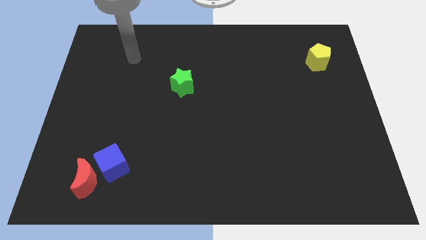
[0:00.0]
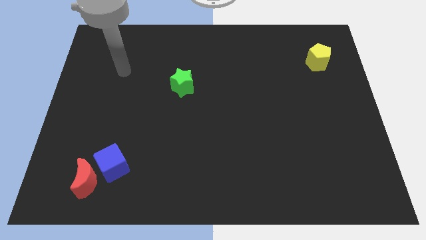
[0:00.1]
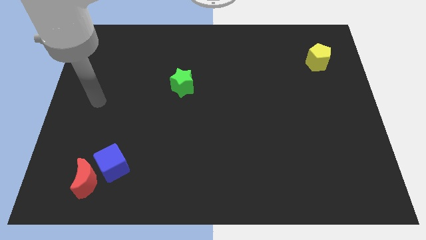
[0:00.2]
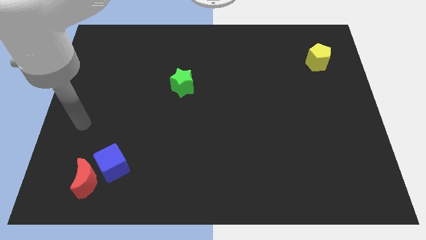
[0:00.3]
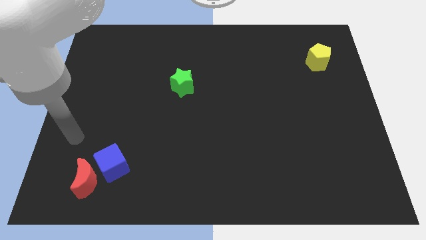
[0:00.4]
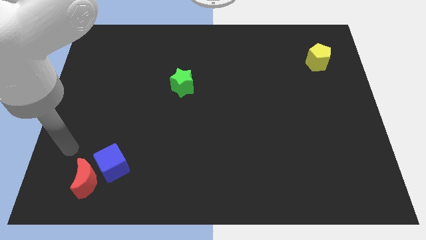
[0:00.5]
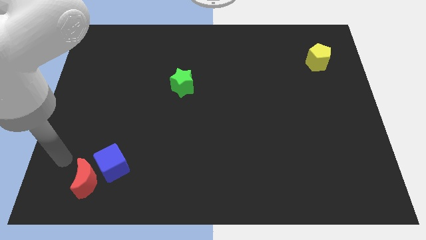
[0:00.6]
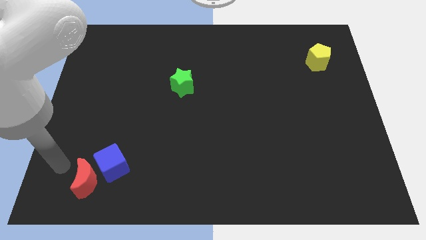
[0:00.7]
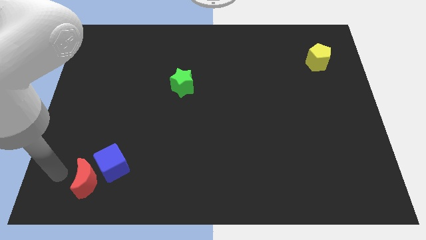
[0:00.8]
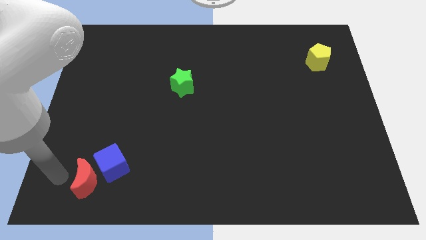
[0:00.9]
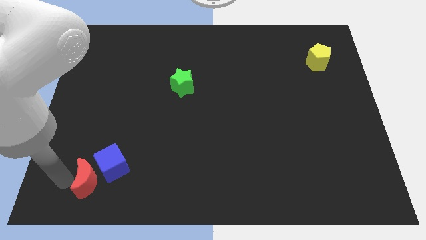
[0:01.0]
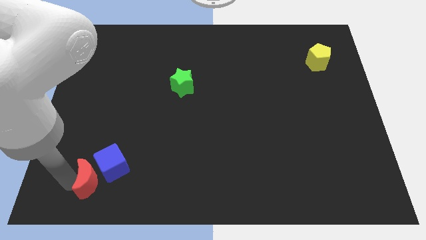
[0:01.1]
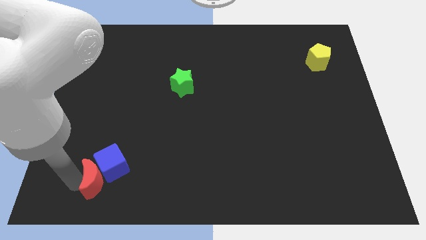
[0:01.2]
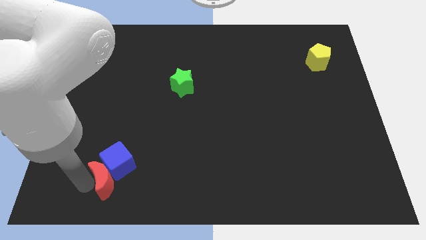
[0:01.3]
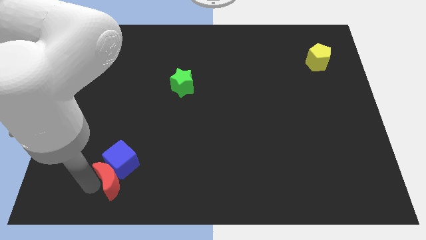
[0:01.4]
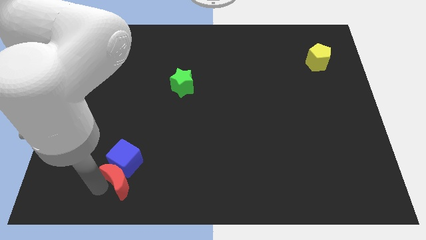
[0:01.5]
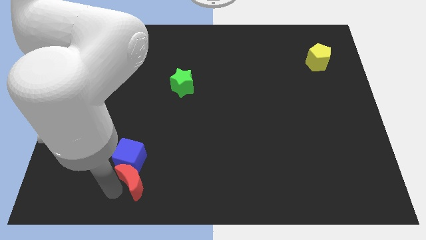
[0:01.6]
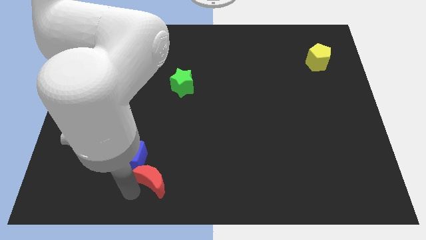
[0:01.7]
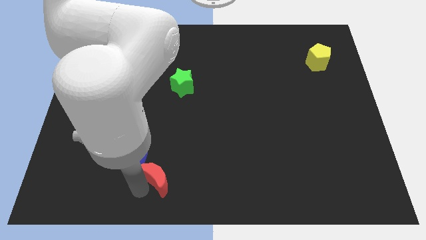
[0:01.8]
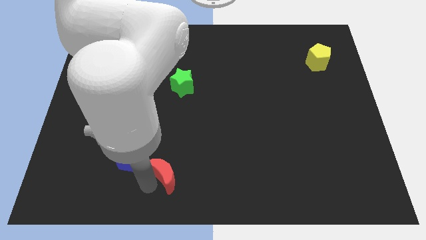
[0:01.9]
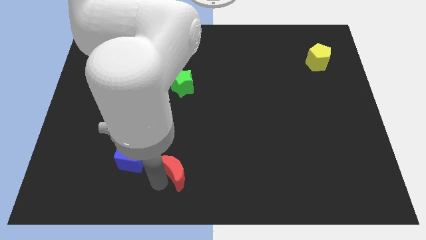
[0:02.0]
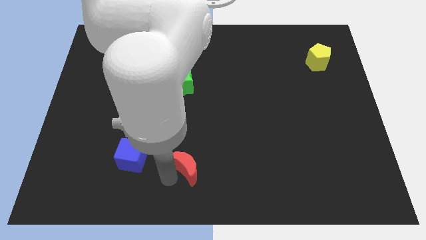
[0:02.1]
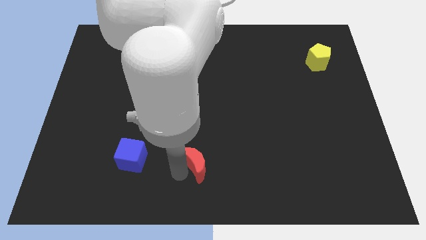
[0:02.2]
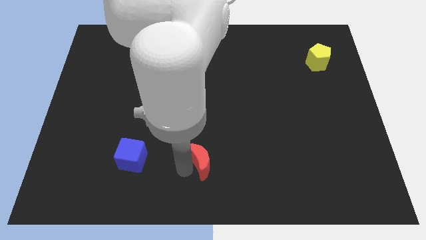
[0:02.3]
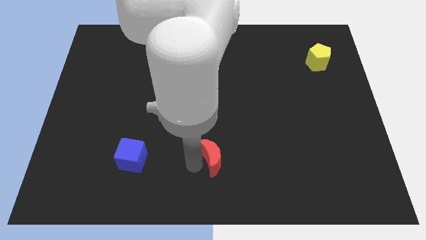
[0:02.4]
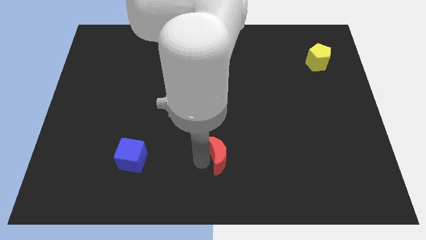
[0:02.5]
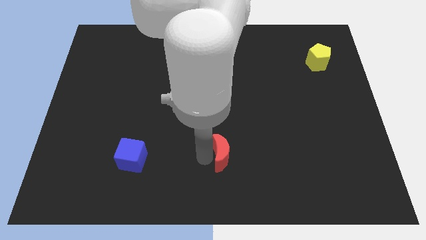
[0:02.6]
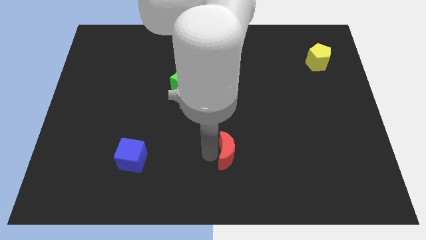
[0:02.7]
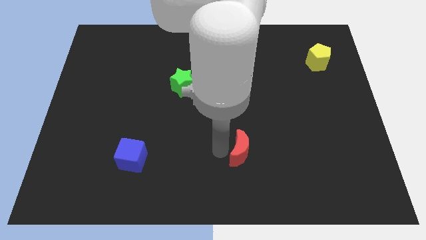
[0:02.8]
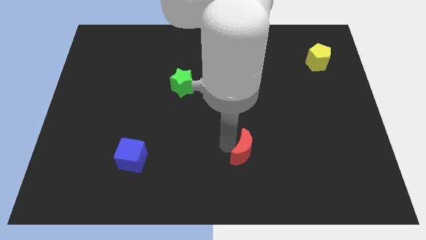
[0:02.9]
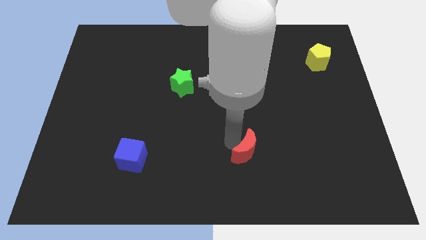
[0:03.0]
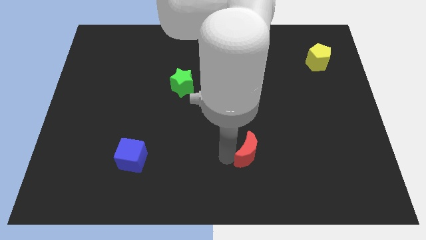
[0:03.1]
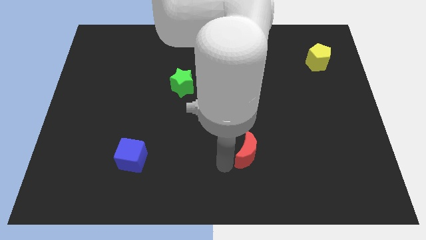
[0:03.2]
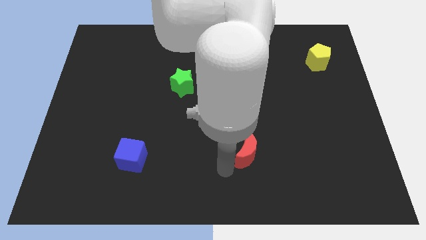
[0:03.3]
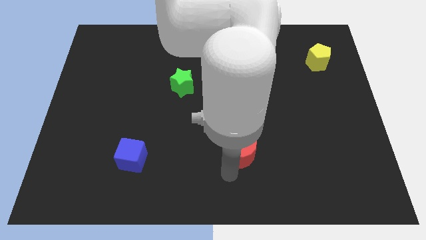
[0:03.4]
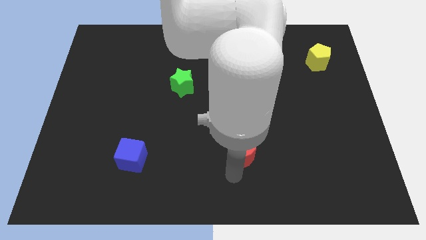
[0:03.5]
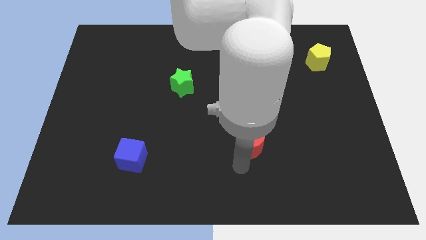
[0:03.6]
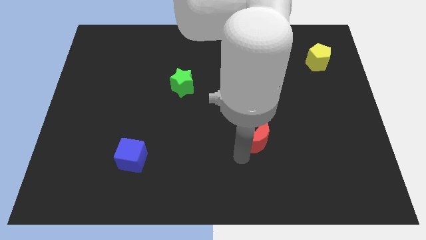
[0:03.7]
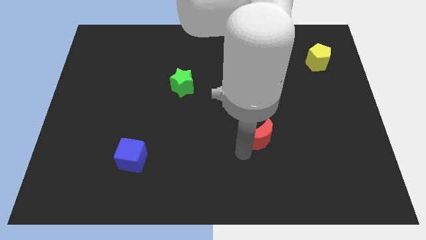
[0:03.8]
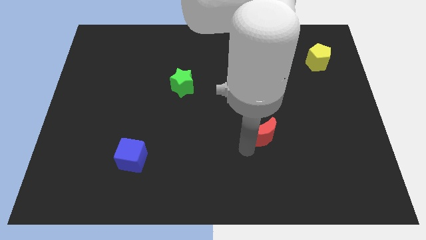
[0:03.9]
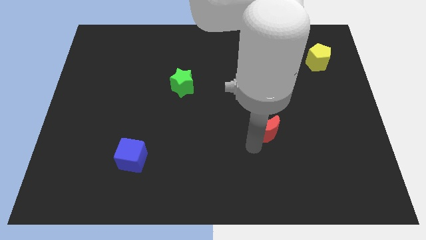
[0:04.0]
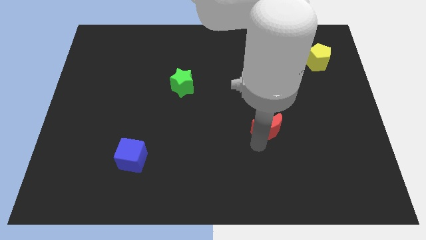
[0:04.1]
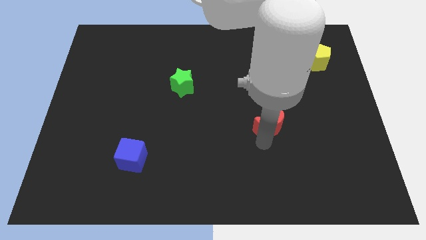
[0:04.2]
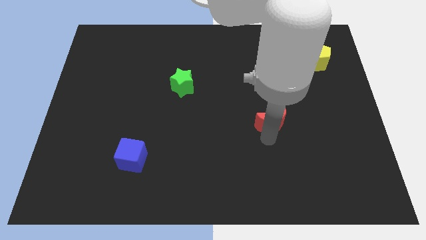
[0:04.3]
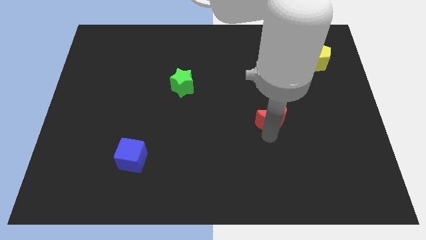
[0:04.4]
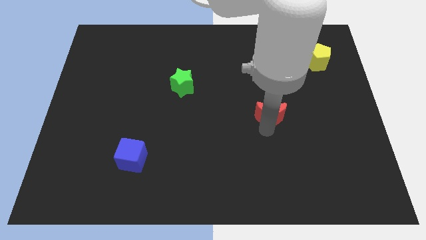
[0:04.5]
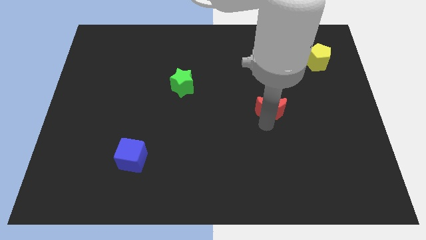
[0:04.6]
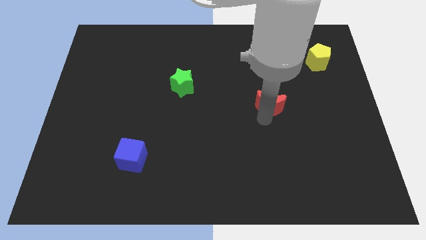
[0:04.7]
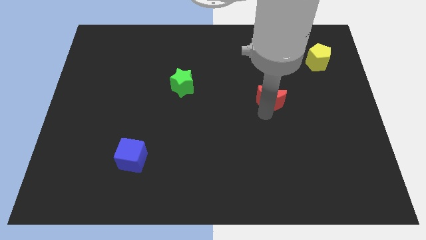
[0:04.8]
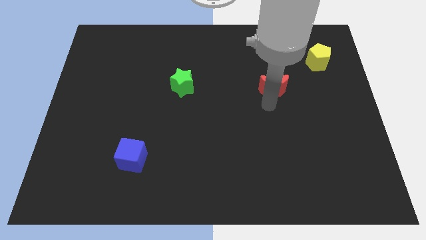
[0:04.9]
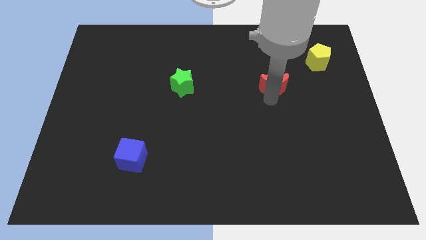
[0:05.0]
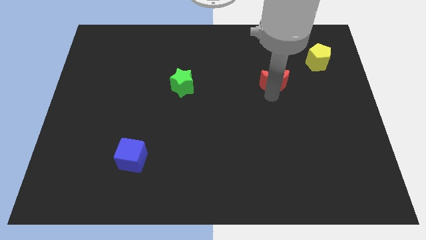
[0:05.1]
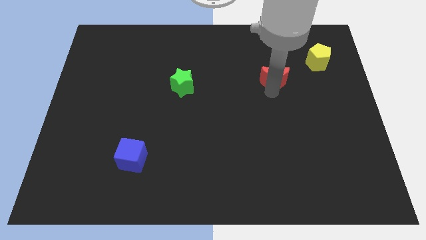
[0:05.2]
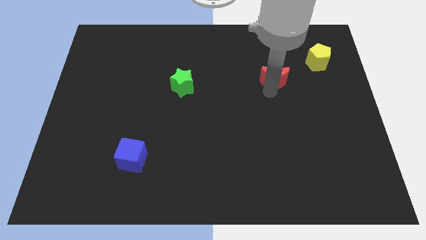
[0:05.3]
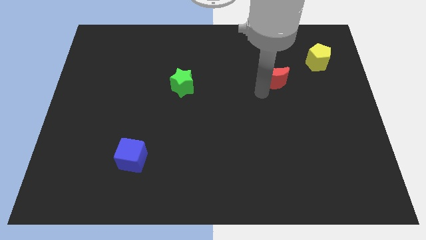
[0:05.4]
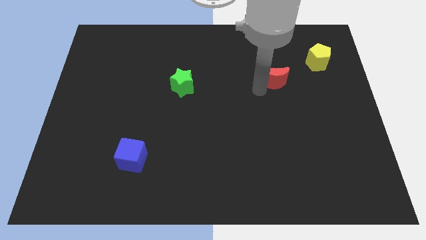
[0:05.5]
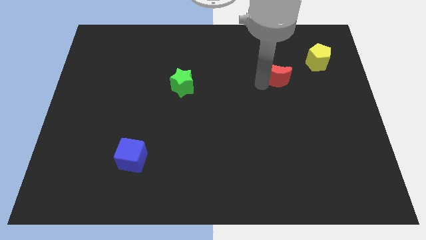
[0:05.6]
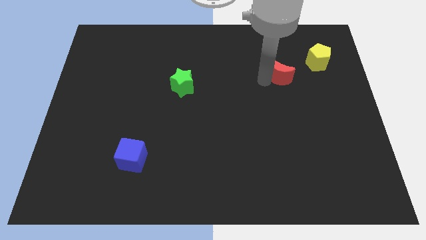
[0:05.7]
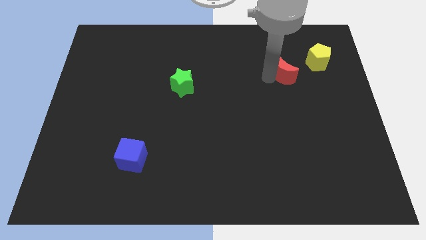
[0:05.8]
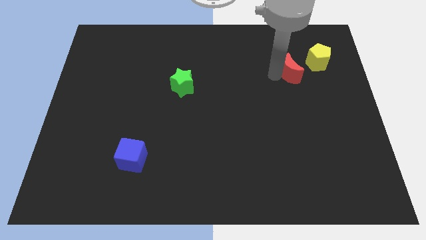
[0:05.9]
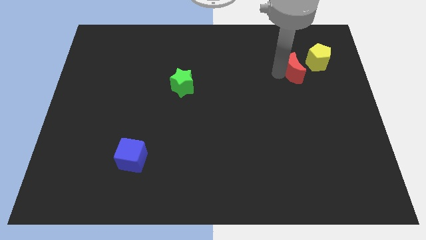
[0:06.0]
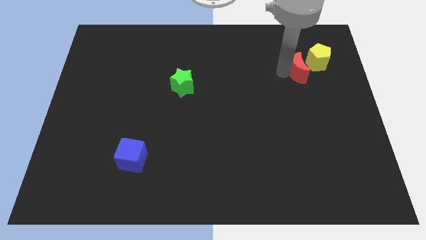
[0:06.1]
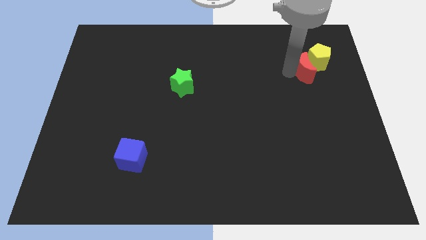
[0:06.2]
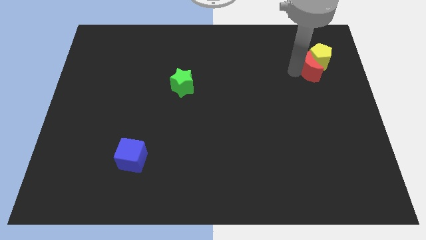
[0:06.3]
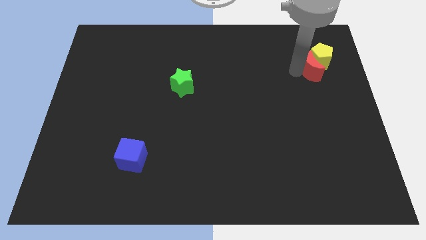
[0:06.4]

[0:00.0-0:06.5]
slide the moon next to the yellow block

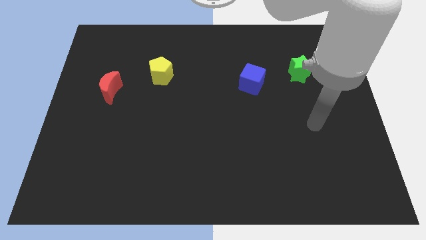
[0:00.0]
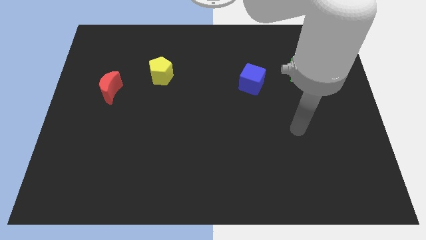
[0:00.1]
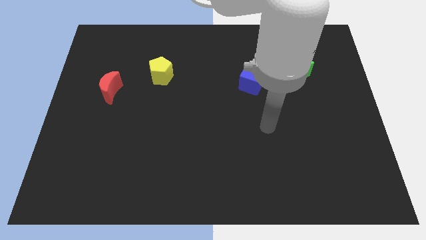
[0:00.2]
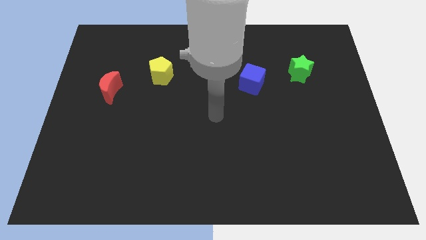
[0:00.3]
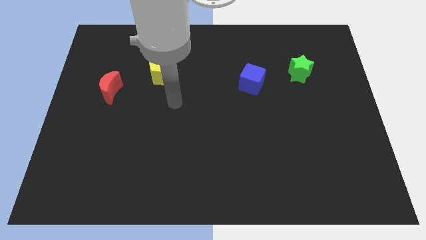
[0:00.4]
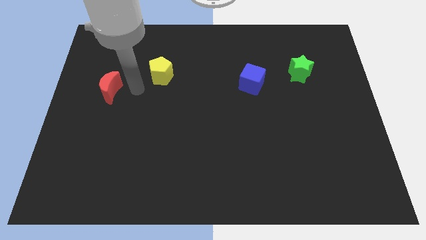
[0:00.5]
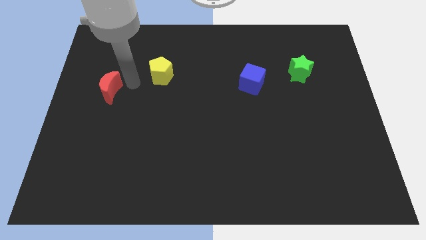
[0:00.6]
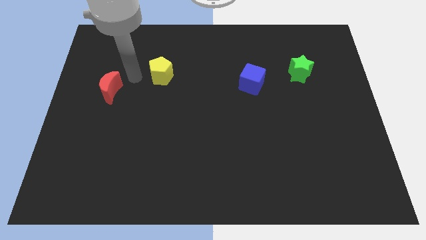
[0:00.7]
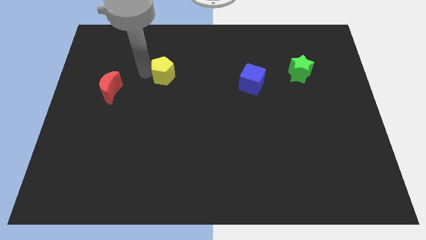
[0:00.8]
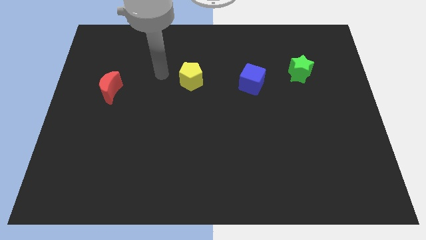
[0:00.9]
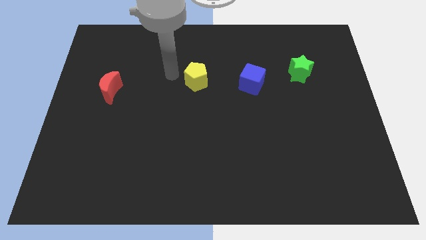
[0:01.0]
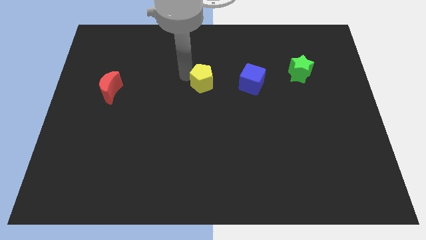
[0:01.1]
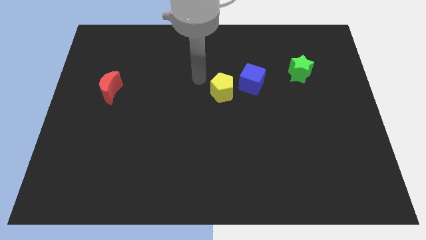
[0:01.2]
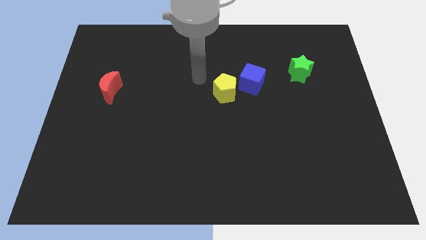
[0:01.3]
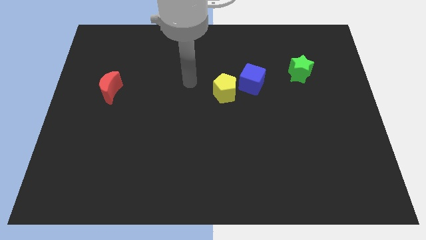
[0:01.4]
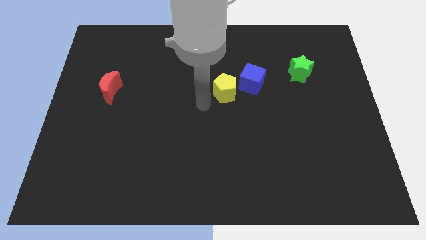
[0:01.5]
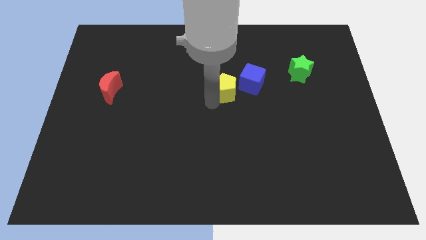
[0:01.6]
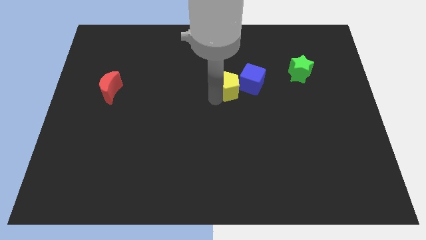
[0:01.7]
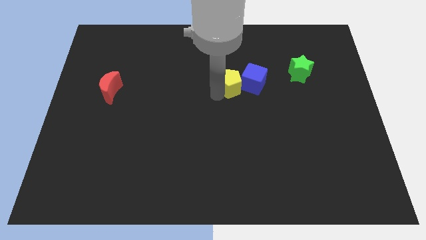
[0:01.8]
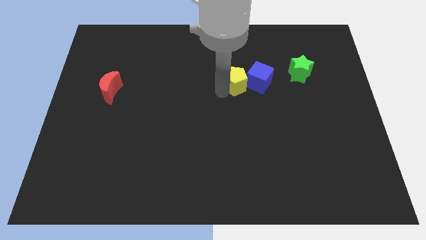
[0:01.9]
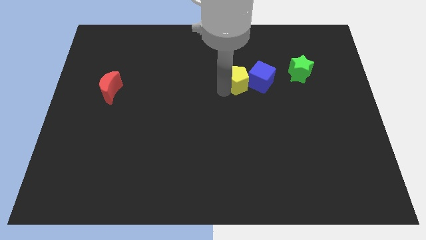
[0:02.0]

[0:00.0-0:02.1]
slide the pentagon to the blue cube

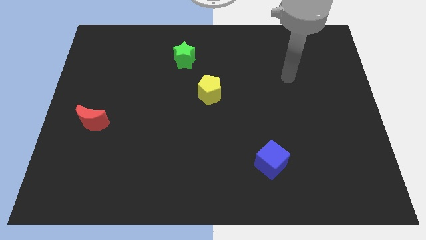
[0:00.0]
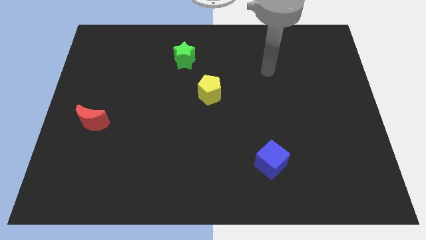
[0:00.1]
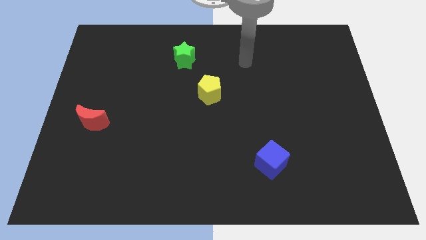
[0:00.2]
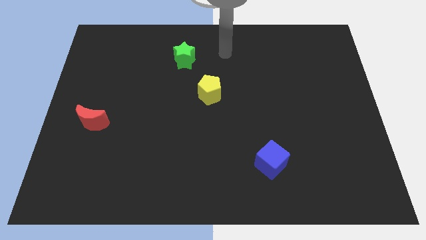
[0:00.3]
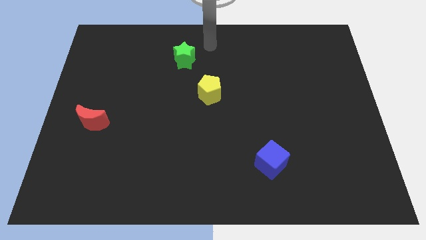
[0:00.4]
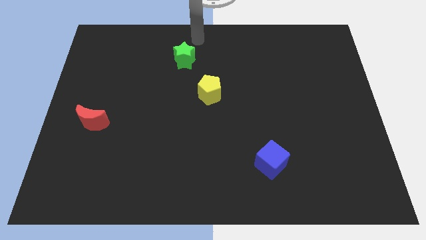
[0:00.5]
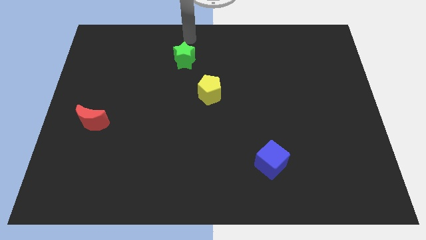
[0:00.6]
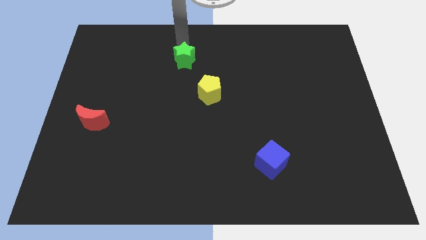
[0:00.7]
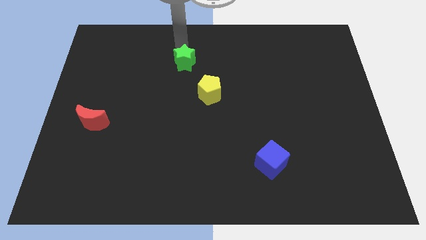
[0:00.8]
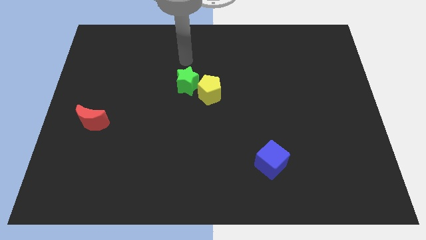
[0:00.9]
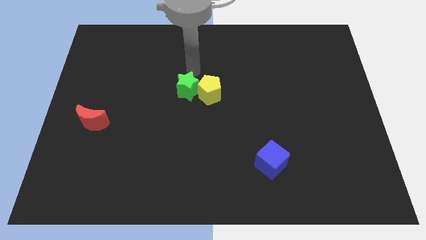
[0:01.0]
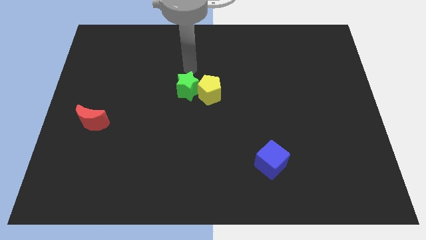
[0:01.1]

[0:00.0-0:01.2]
slide the star towards the yellow pentagon
